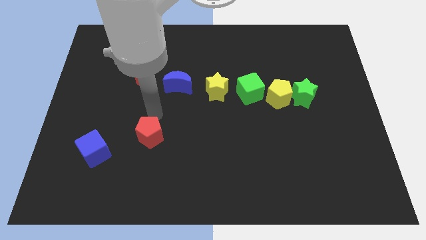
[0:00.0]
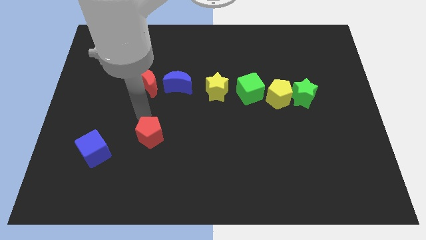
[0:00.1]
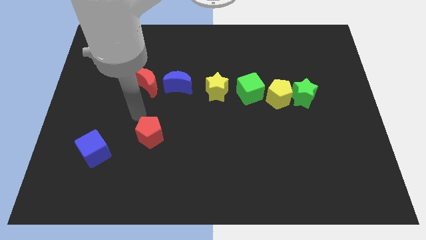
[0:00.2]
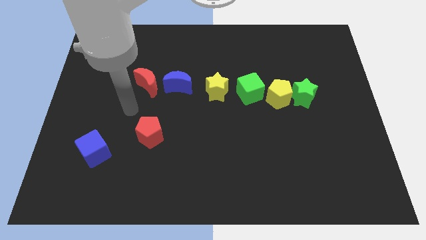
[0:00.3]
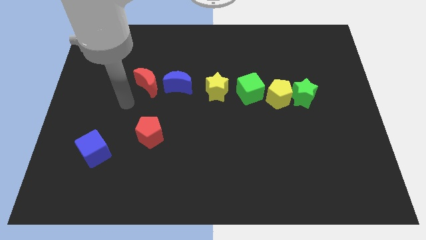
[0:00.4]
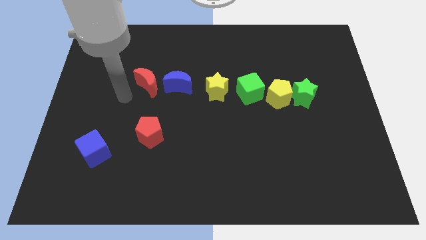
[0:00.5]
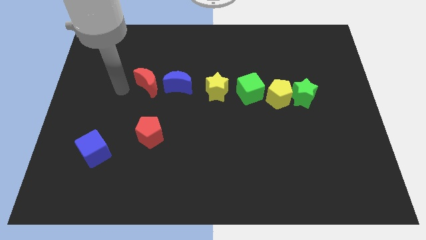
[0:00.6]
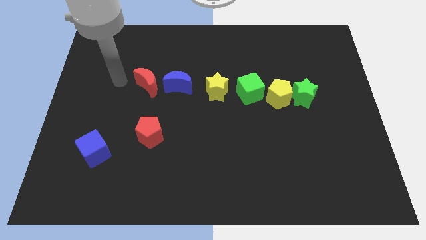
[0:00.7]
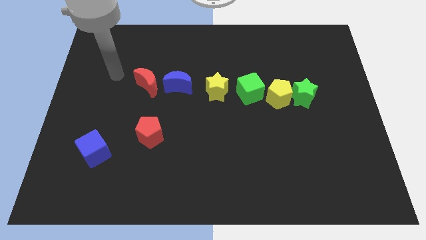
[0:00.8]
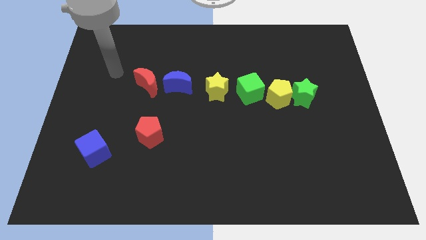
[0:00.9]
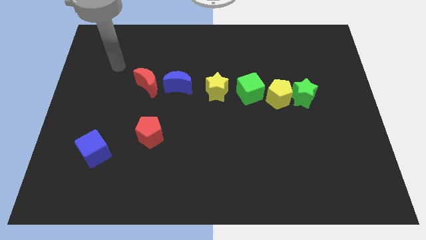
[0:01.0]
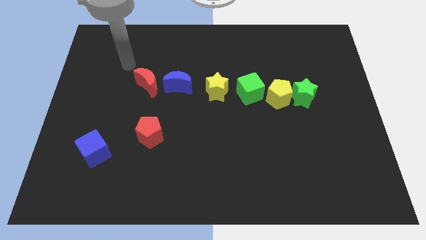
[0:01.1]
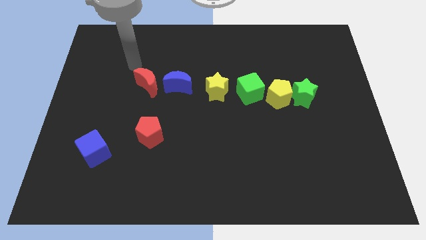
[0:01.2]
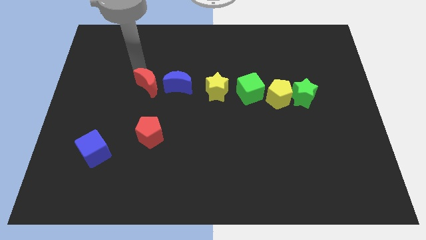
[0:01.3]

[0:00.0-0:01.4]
move your hand to the top of the red crescent

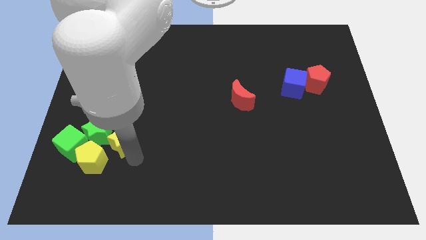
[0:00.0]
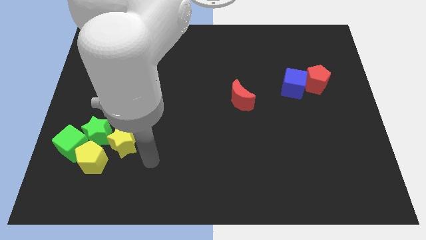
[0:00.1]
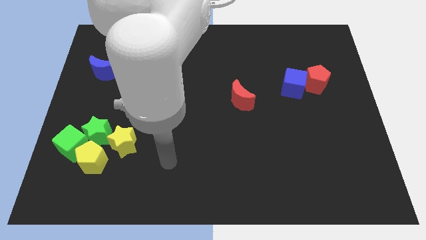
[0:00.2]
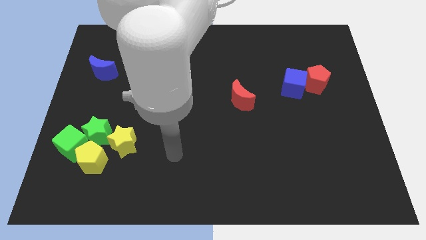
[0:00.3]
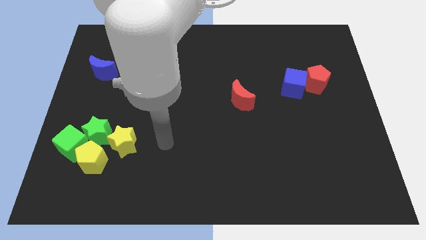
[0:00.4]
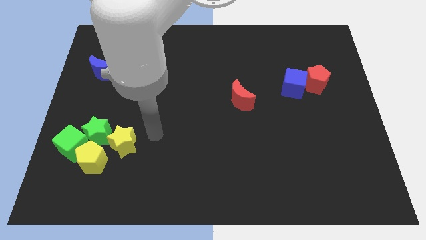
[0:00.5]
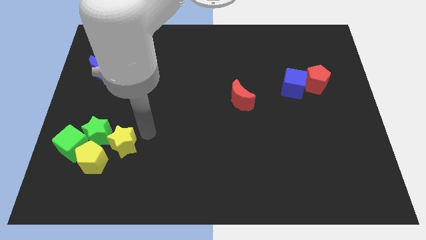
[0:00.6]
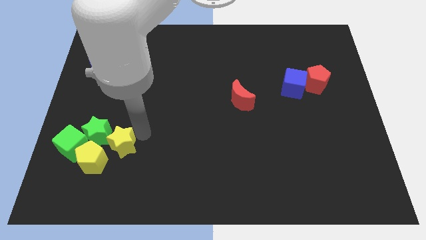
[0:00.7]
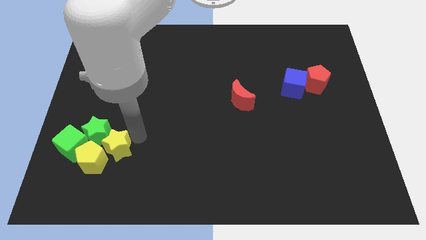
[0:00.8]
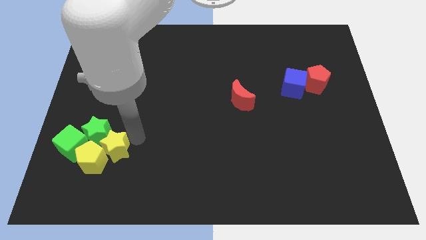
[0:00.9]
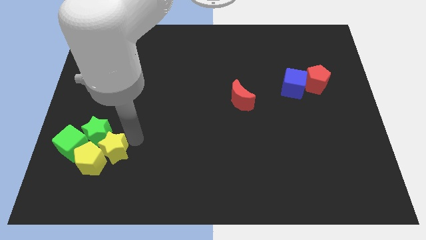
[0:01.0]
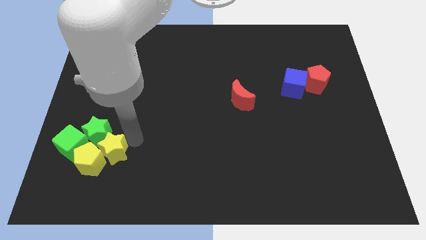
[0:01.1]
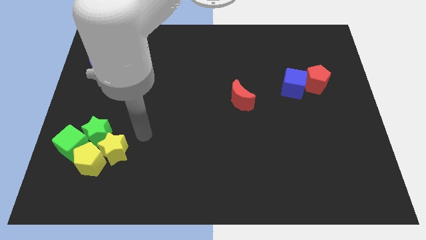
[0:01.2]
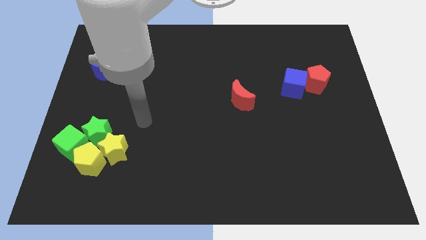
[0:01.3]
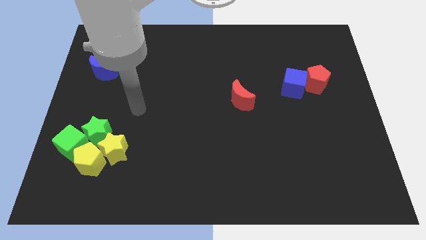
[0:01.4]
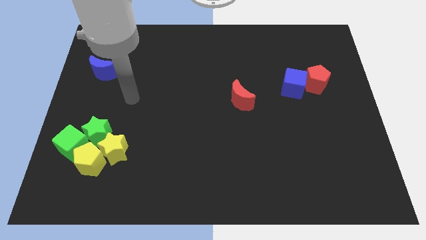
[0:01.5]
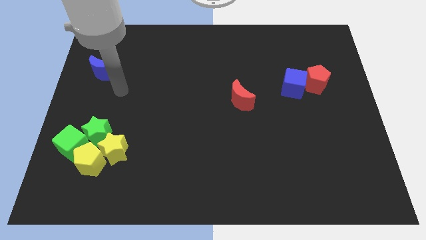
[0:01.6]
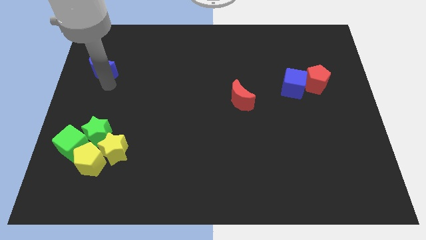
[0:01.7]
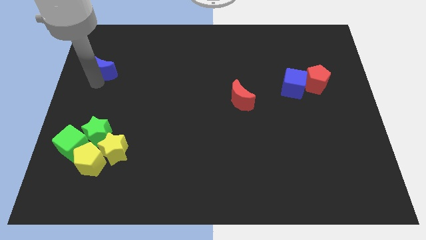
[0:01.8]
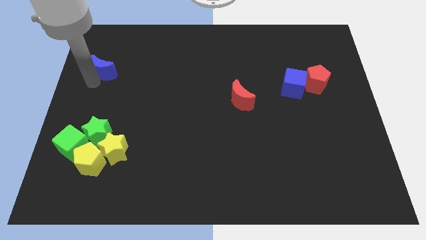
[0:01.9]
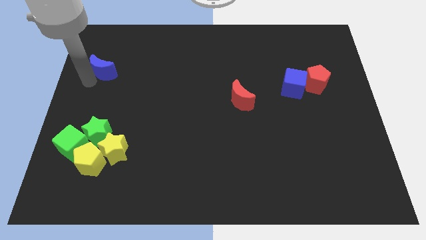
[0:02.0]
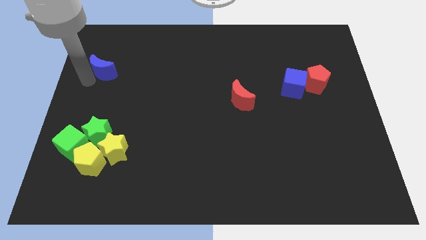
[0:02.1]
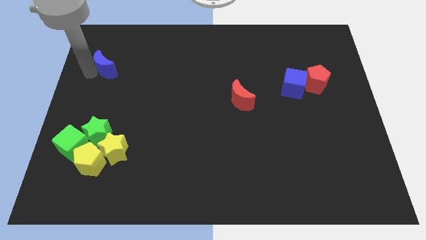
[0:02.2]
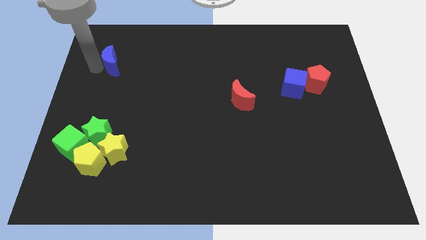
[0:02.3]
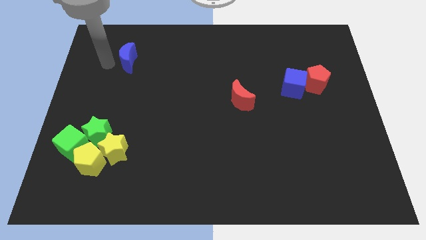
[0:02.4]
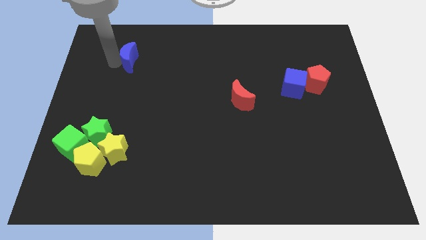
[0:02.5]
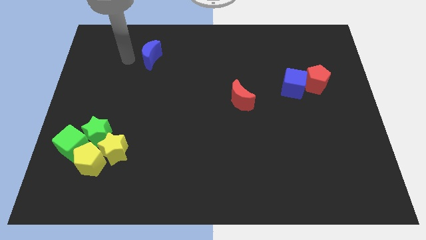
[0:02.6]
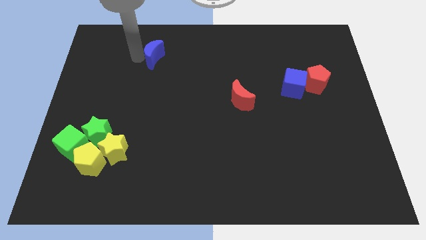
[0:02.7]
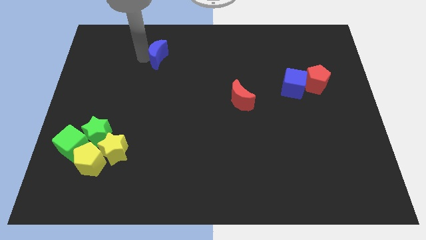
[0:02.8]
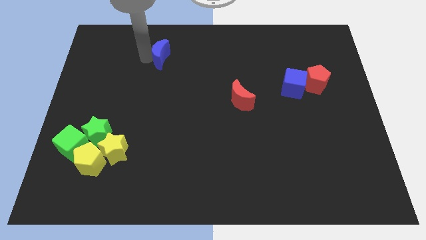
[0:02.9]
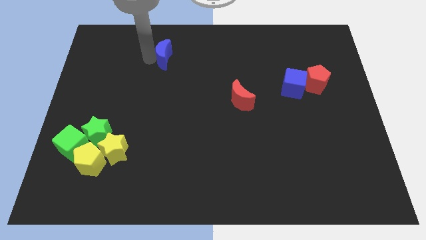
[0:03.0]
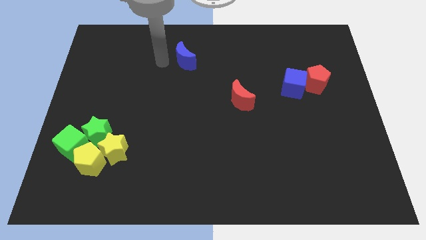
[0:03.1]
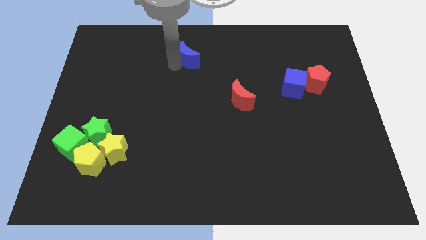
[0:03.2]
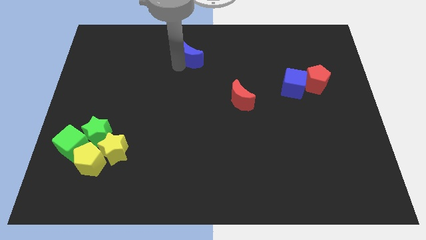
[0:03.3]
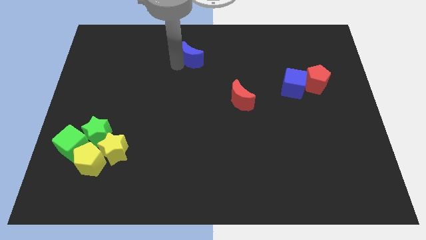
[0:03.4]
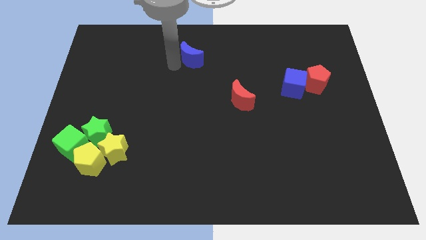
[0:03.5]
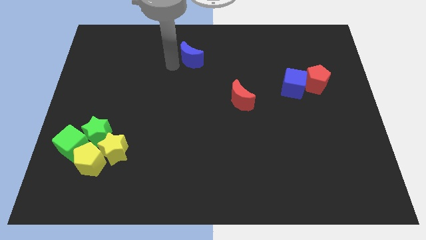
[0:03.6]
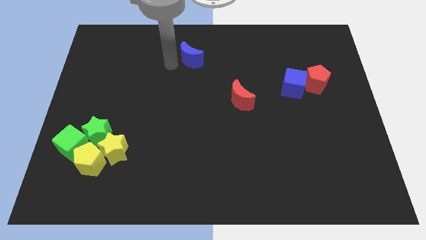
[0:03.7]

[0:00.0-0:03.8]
slightly move the blue crescent to the top center of the board

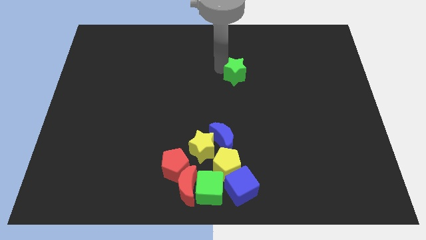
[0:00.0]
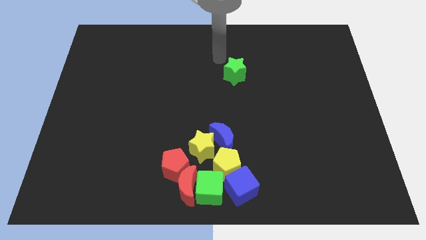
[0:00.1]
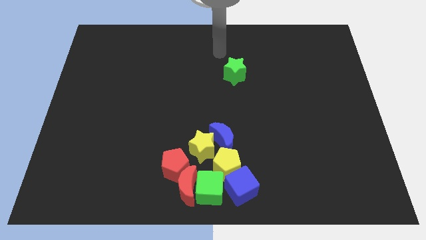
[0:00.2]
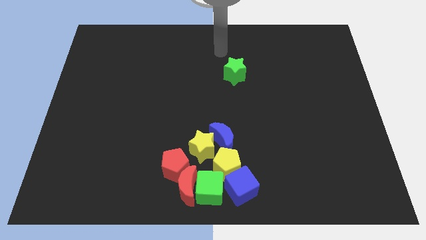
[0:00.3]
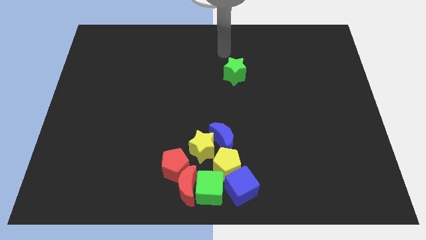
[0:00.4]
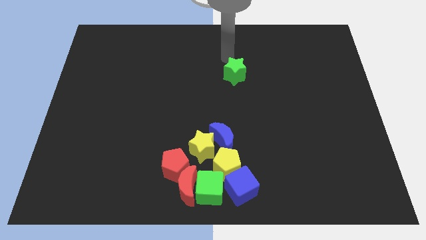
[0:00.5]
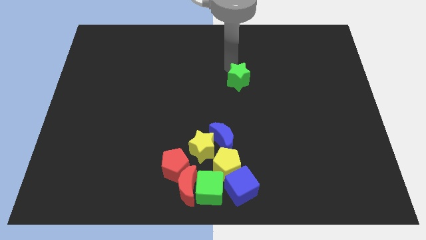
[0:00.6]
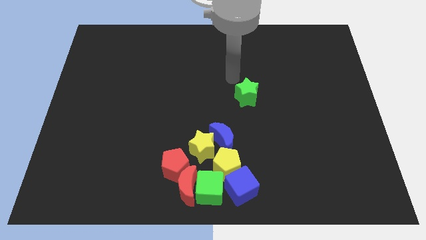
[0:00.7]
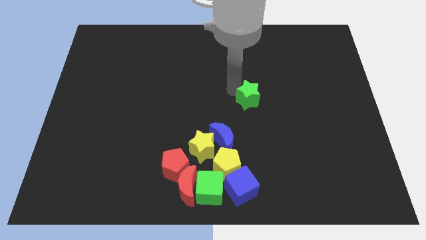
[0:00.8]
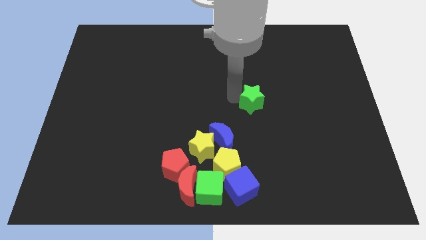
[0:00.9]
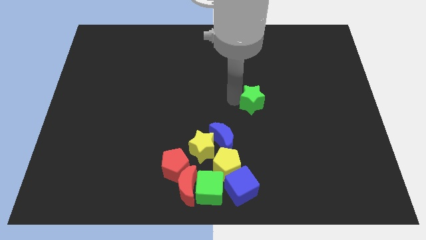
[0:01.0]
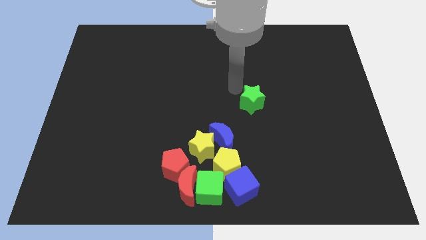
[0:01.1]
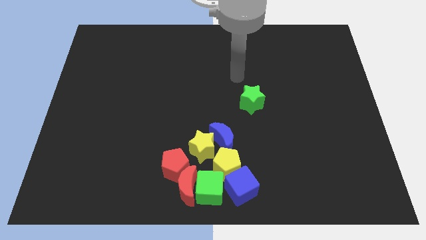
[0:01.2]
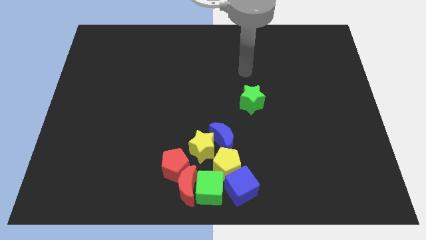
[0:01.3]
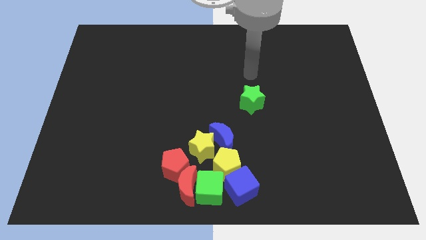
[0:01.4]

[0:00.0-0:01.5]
place the green star diagonally top right to blue moon

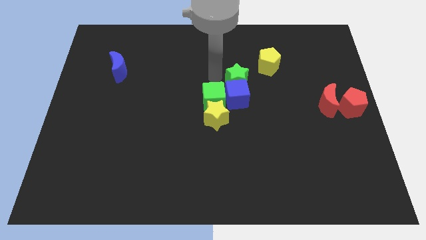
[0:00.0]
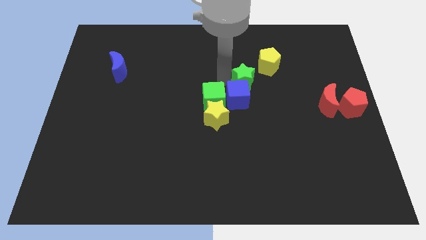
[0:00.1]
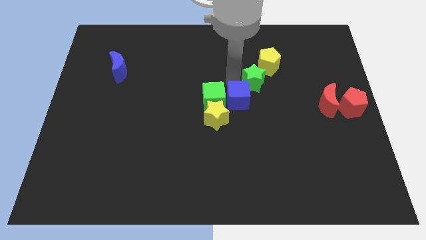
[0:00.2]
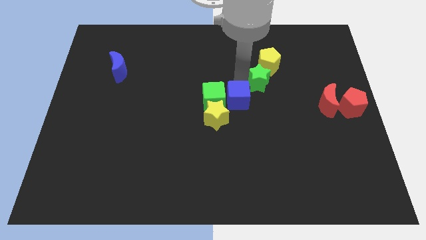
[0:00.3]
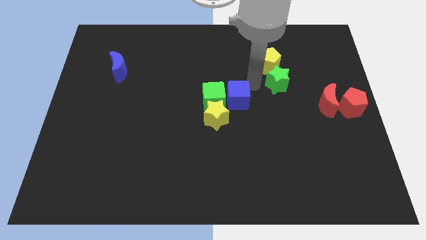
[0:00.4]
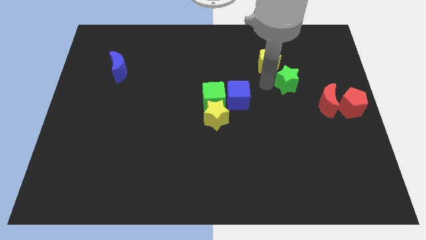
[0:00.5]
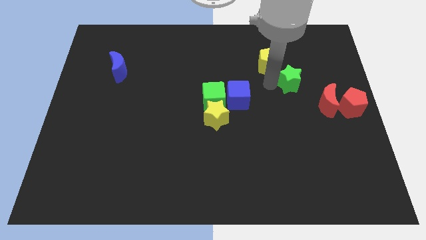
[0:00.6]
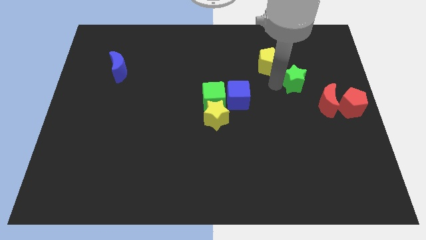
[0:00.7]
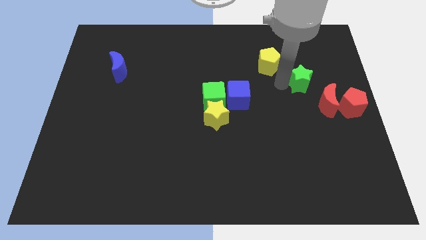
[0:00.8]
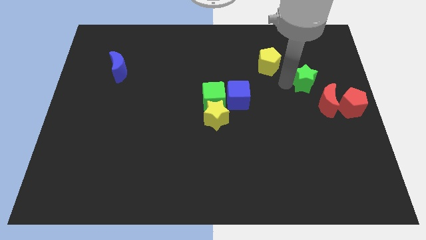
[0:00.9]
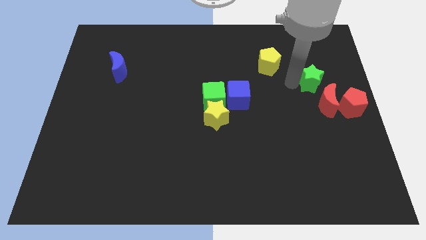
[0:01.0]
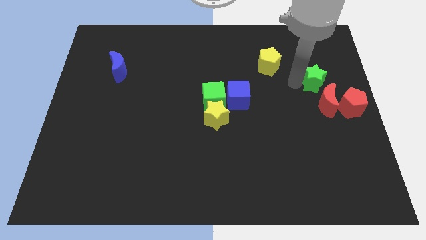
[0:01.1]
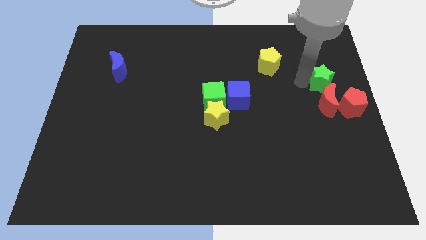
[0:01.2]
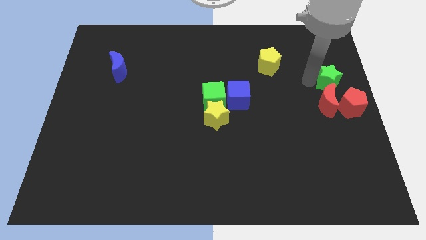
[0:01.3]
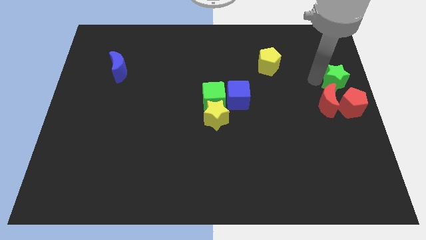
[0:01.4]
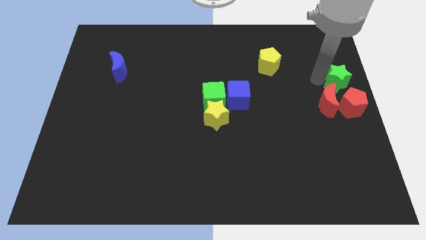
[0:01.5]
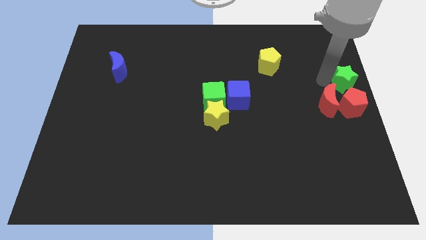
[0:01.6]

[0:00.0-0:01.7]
place green star above red moon

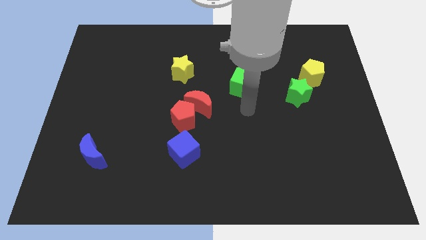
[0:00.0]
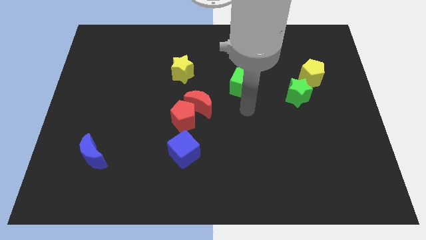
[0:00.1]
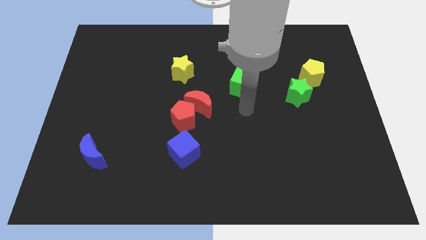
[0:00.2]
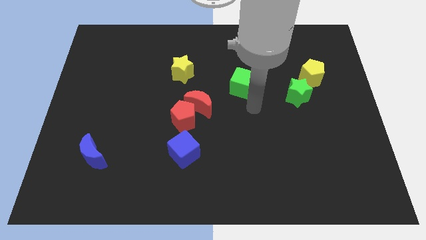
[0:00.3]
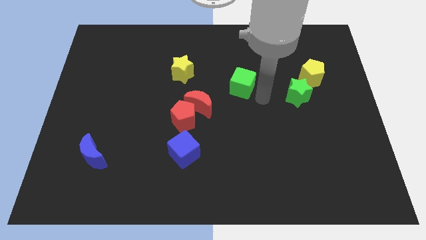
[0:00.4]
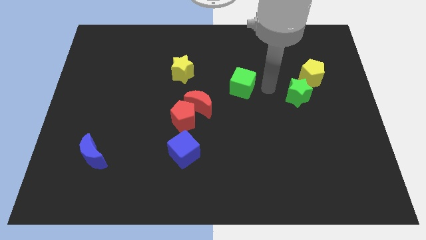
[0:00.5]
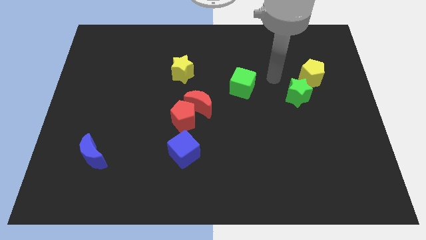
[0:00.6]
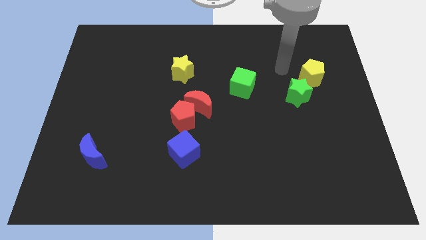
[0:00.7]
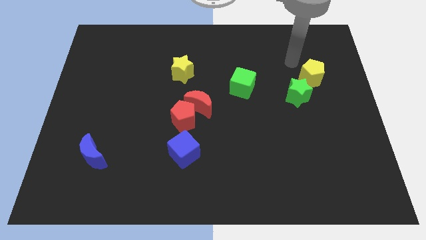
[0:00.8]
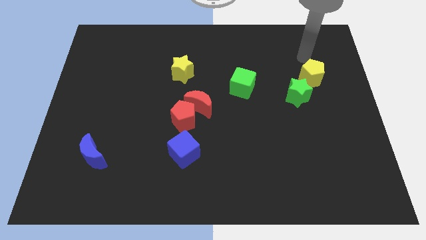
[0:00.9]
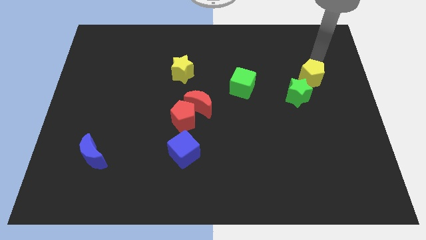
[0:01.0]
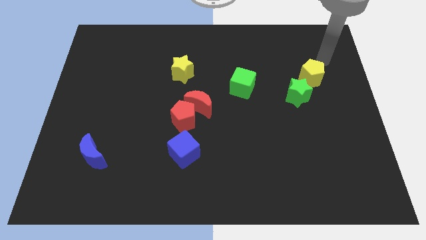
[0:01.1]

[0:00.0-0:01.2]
move the arm close to the yellow pentagon
